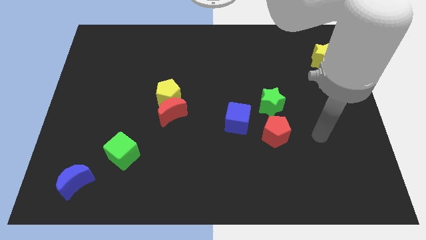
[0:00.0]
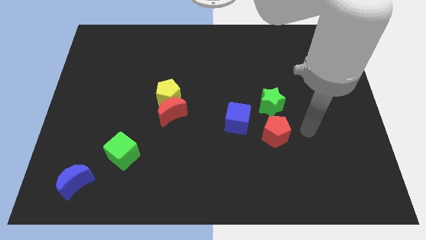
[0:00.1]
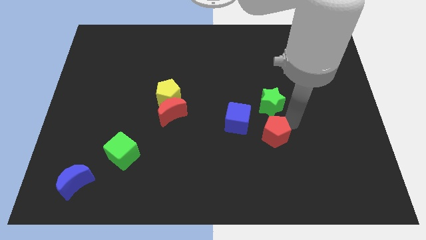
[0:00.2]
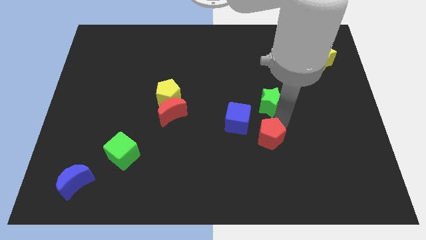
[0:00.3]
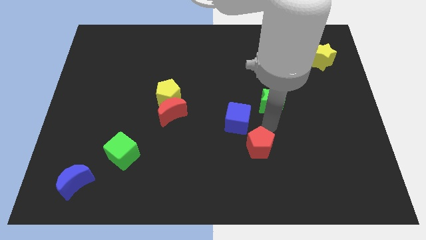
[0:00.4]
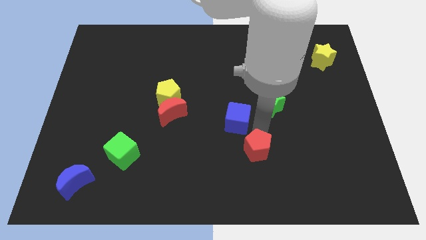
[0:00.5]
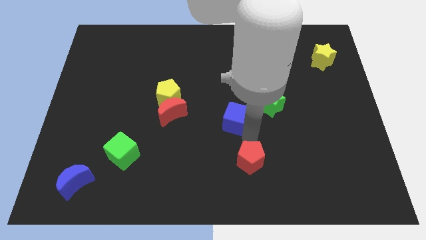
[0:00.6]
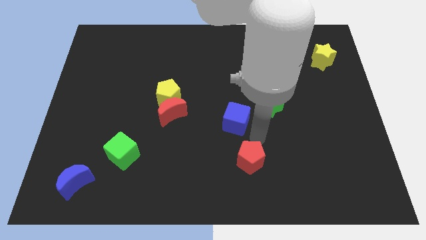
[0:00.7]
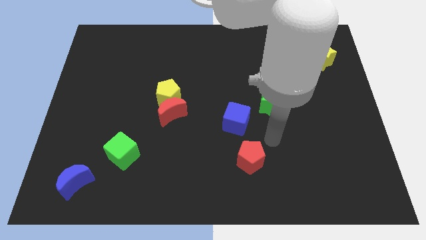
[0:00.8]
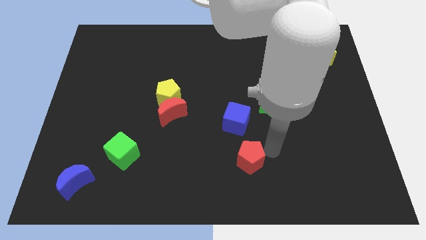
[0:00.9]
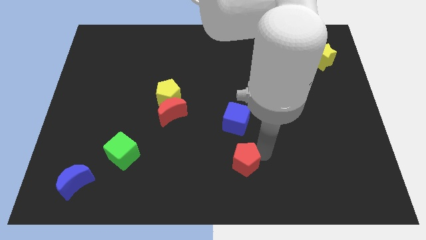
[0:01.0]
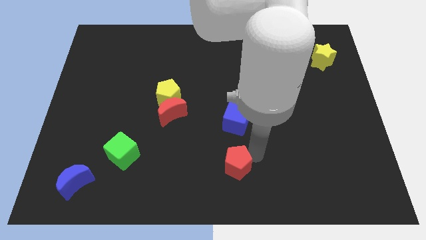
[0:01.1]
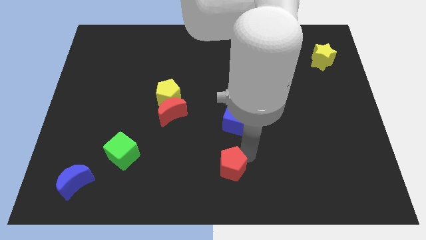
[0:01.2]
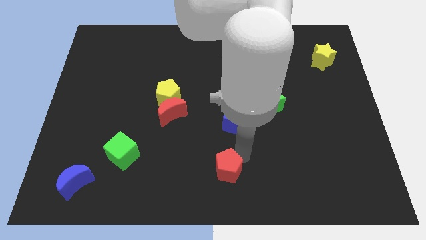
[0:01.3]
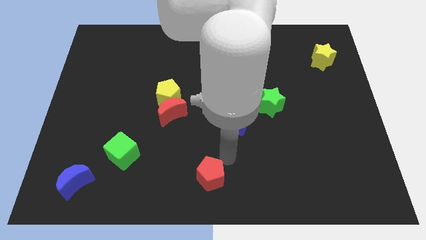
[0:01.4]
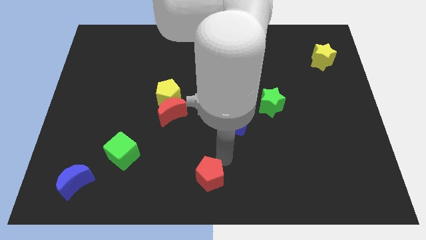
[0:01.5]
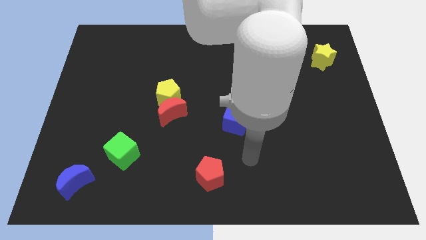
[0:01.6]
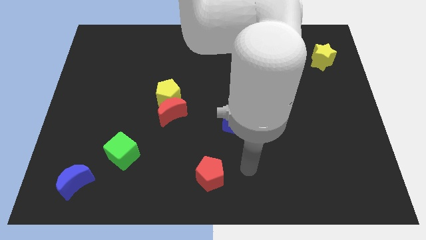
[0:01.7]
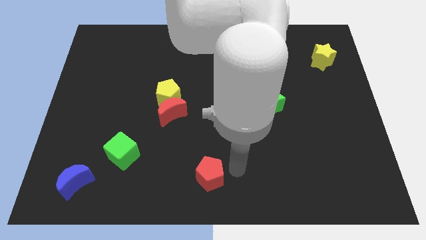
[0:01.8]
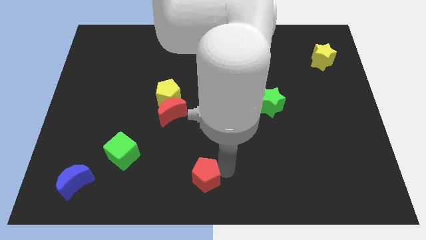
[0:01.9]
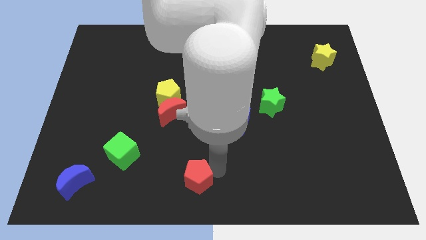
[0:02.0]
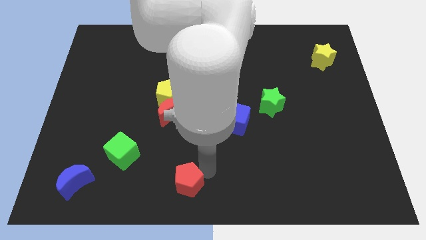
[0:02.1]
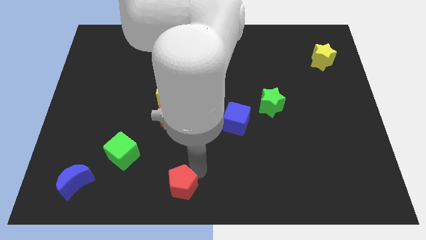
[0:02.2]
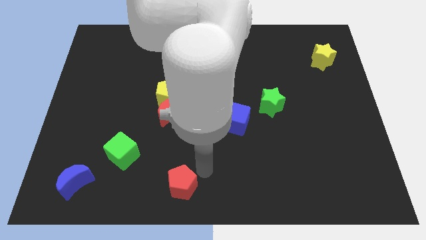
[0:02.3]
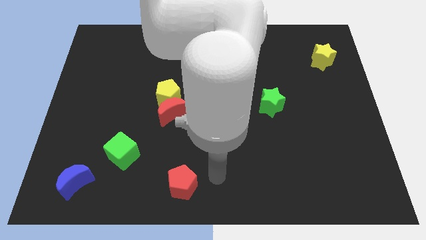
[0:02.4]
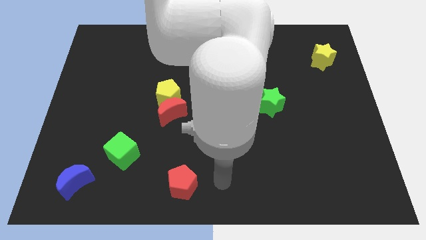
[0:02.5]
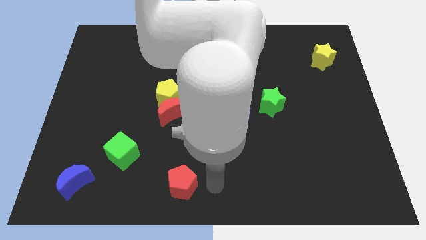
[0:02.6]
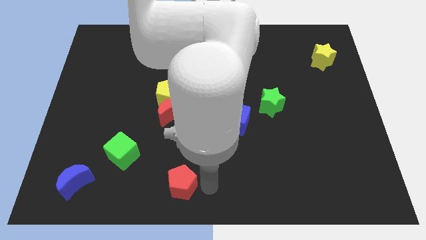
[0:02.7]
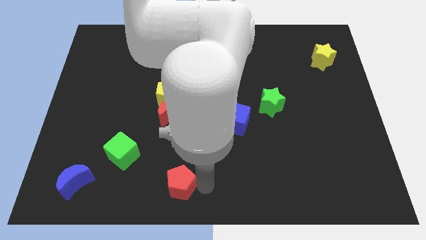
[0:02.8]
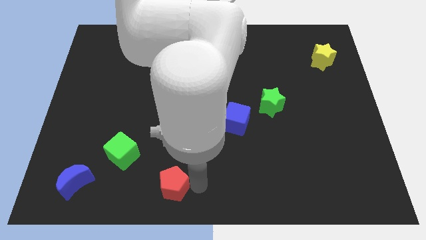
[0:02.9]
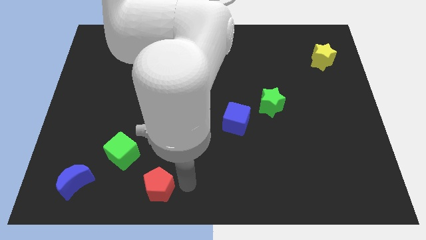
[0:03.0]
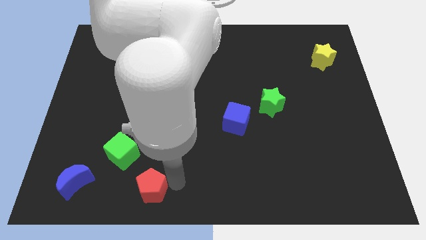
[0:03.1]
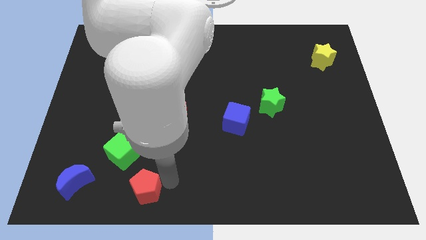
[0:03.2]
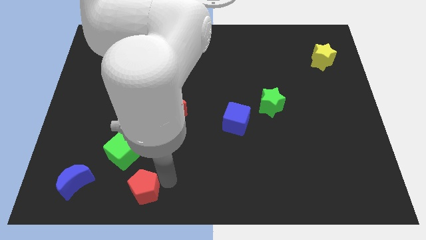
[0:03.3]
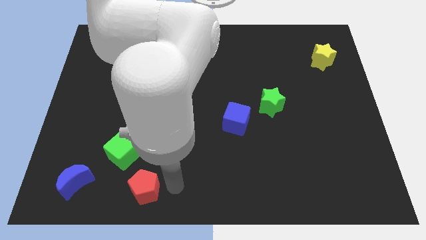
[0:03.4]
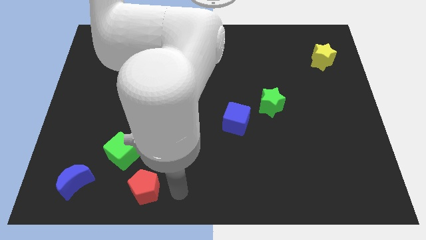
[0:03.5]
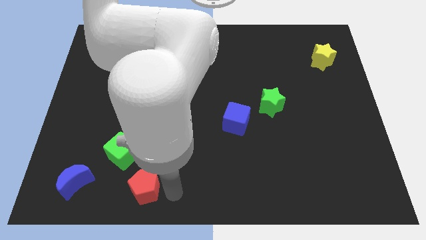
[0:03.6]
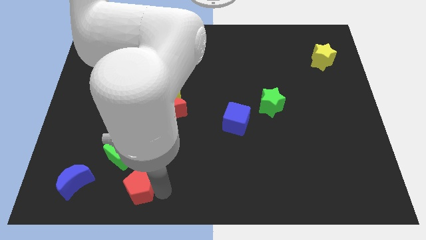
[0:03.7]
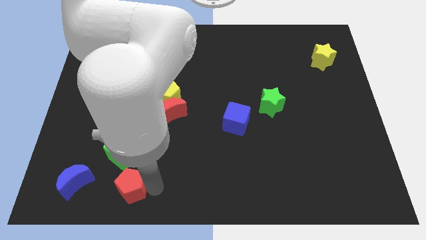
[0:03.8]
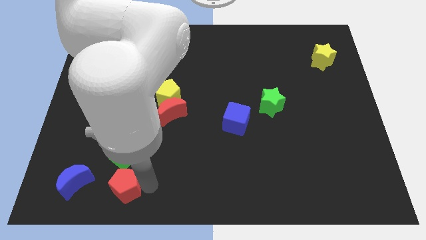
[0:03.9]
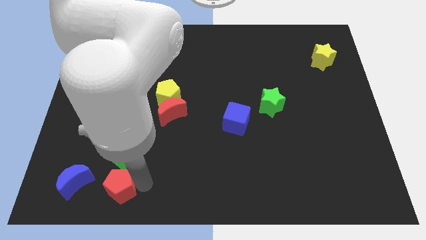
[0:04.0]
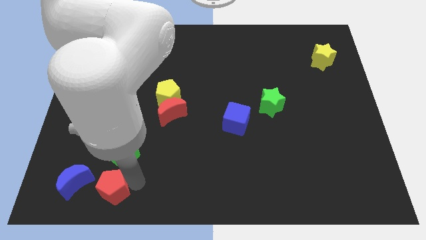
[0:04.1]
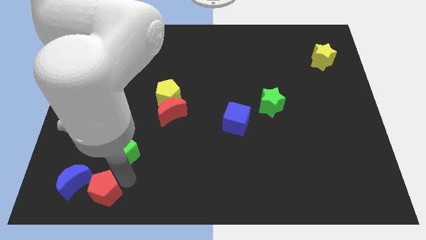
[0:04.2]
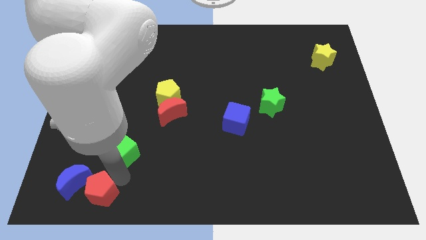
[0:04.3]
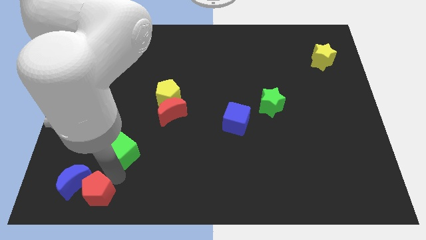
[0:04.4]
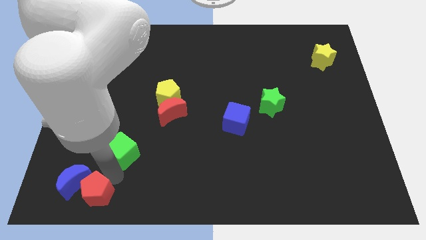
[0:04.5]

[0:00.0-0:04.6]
push the red pentagon towards the blue moon

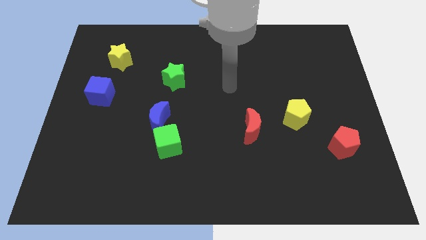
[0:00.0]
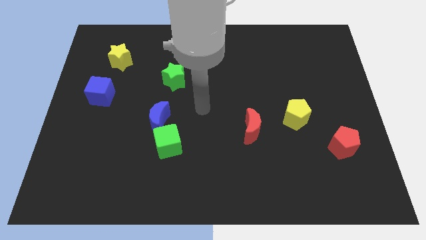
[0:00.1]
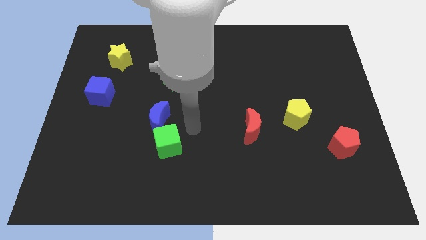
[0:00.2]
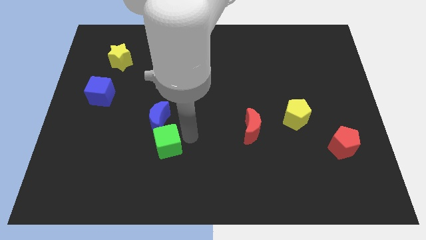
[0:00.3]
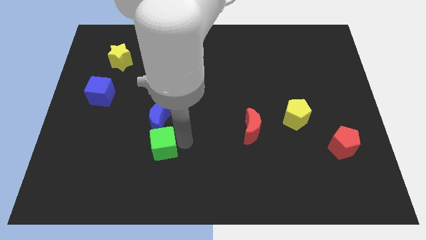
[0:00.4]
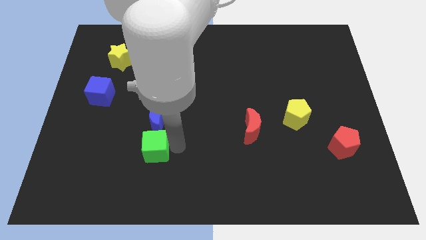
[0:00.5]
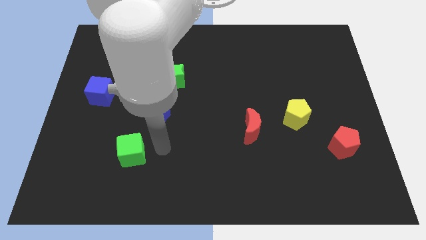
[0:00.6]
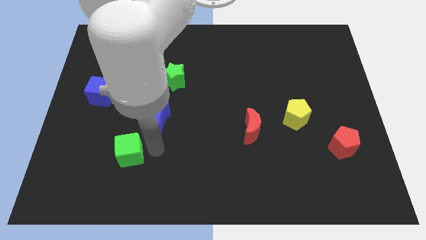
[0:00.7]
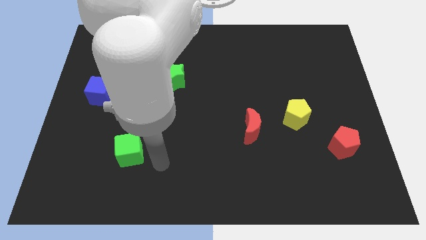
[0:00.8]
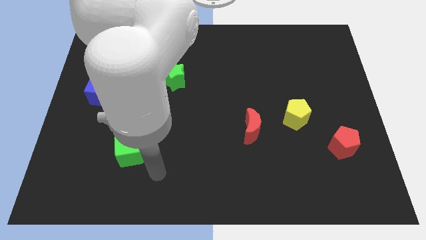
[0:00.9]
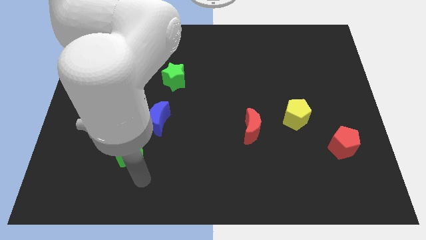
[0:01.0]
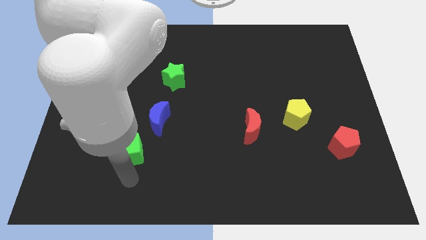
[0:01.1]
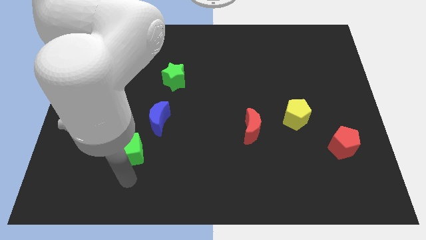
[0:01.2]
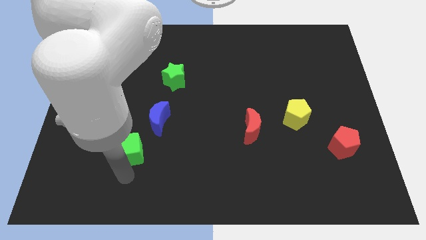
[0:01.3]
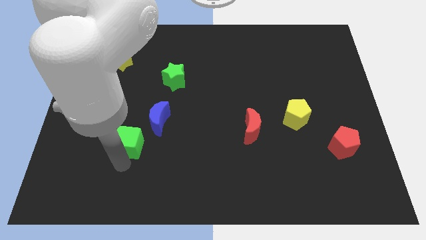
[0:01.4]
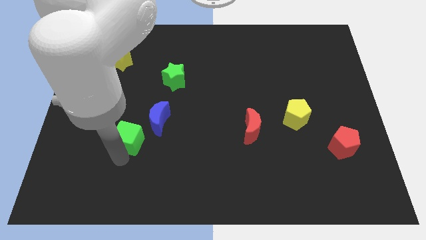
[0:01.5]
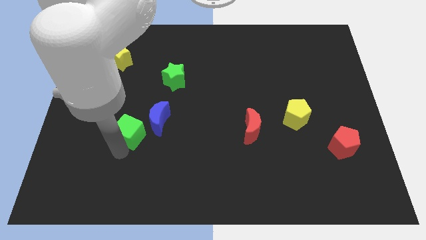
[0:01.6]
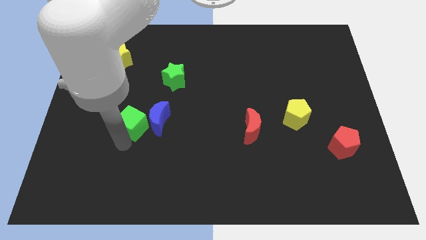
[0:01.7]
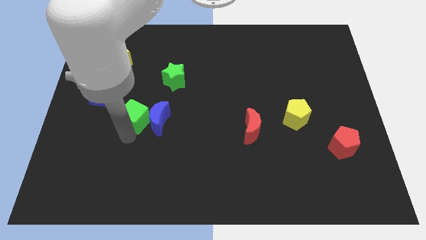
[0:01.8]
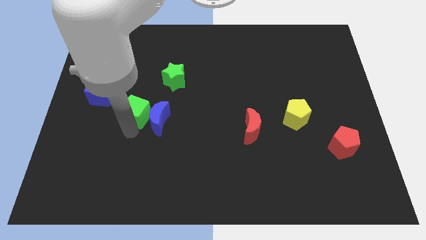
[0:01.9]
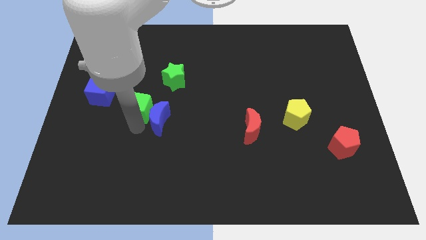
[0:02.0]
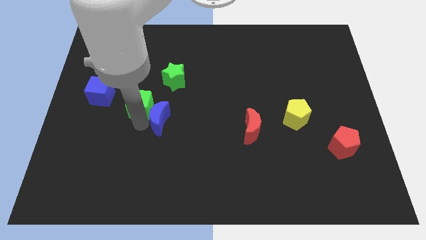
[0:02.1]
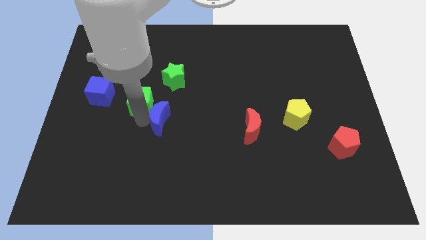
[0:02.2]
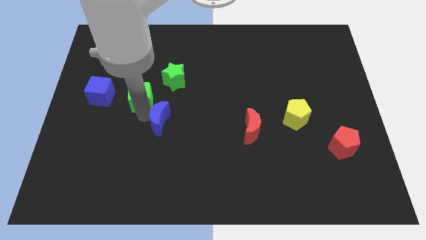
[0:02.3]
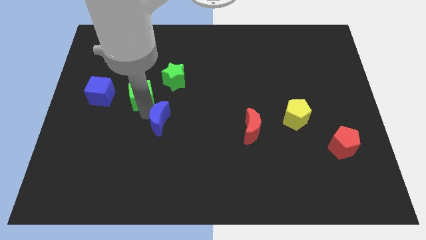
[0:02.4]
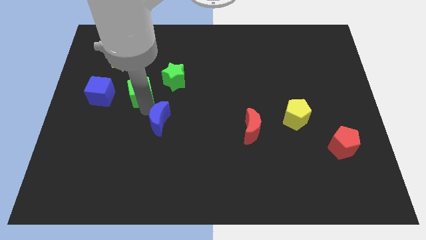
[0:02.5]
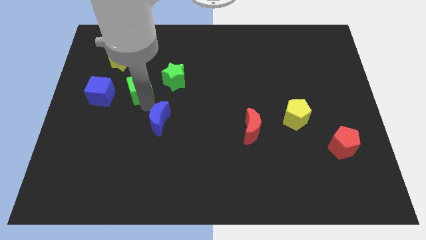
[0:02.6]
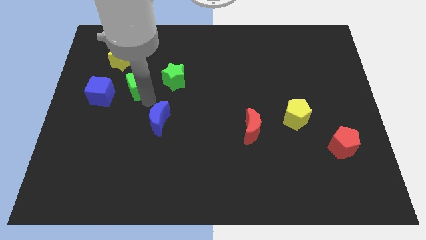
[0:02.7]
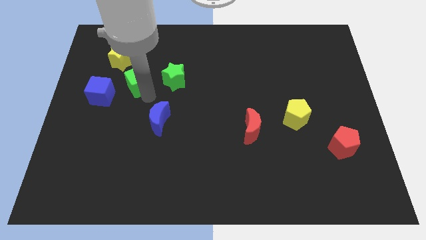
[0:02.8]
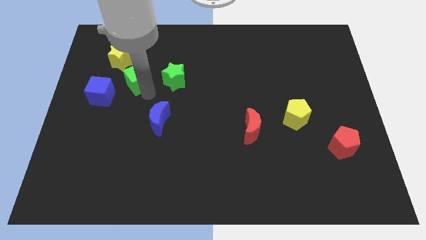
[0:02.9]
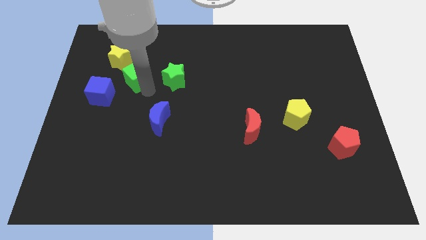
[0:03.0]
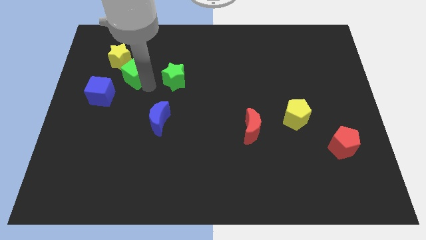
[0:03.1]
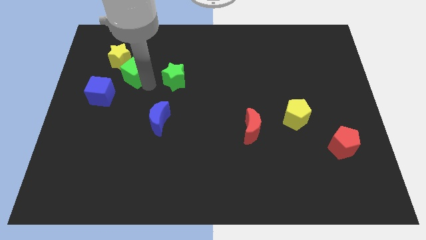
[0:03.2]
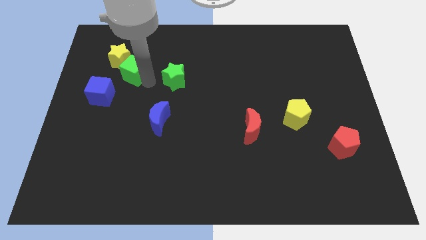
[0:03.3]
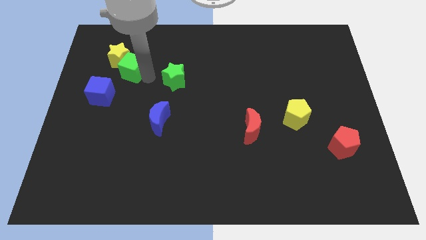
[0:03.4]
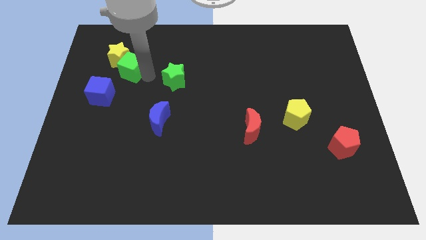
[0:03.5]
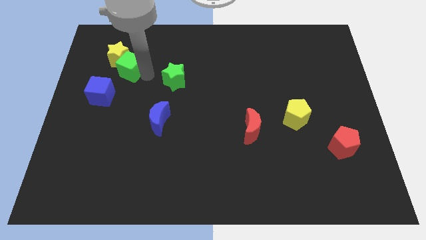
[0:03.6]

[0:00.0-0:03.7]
push the green cube next to the yellow star
